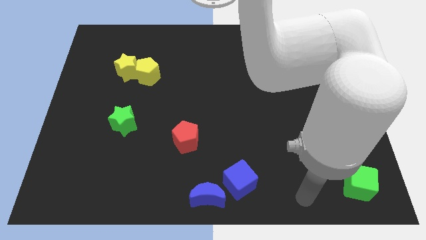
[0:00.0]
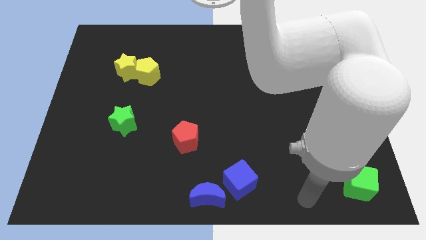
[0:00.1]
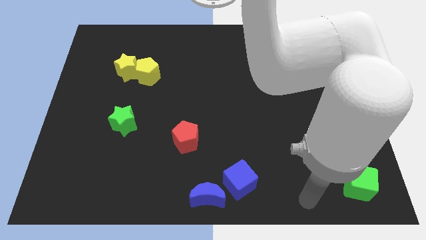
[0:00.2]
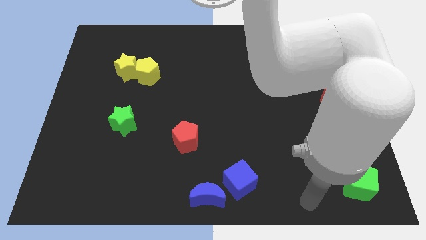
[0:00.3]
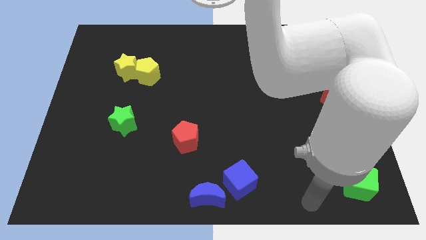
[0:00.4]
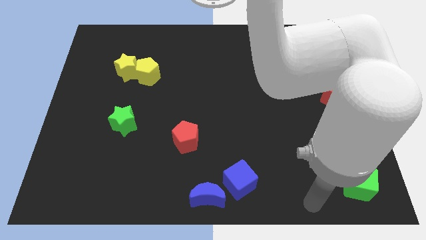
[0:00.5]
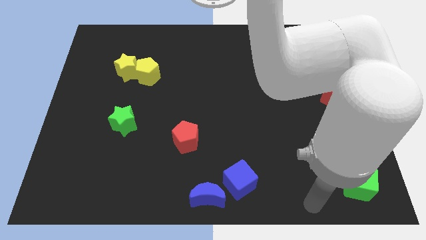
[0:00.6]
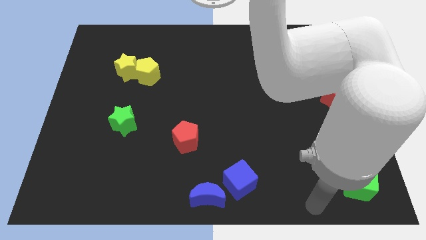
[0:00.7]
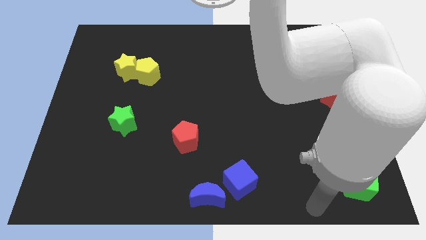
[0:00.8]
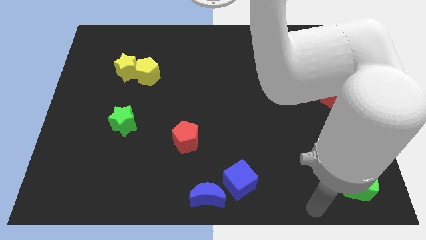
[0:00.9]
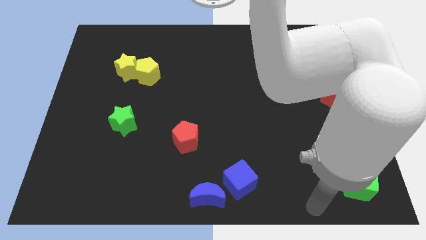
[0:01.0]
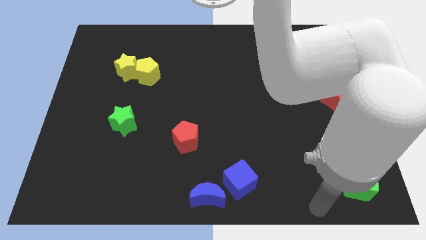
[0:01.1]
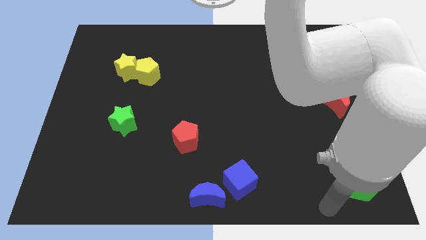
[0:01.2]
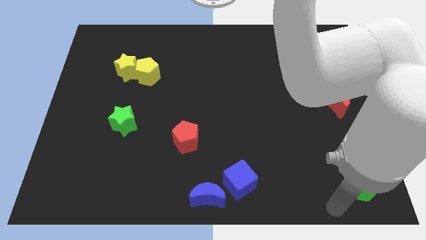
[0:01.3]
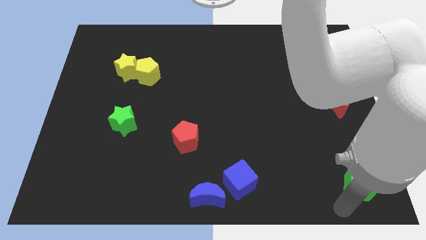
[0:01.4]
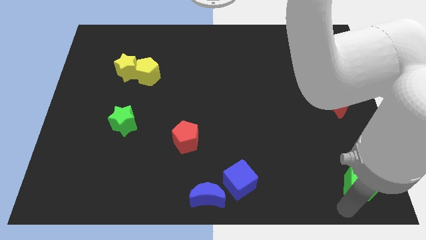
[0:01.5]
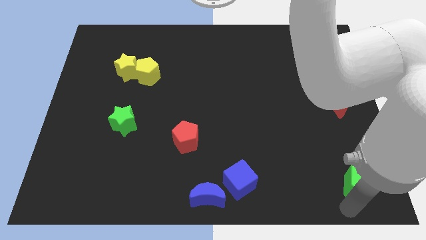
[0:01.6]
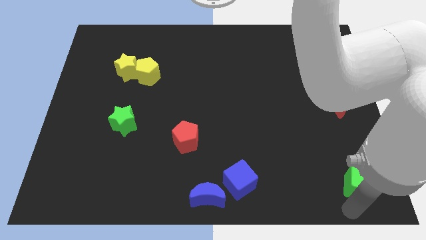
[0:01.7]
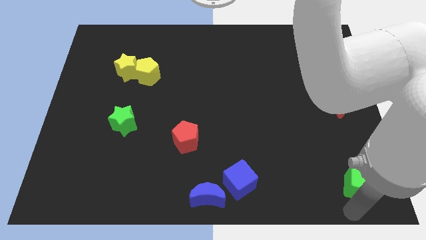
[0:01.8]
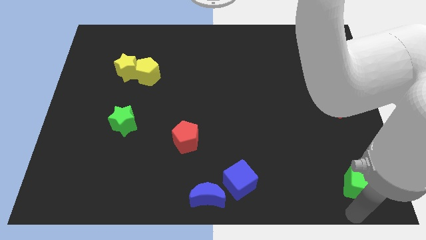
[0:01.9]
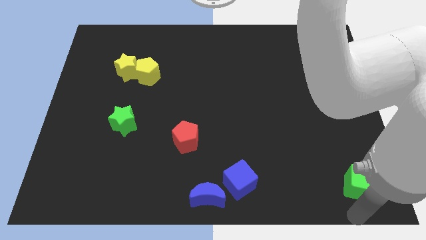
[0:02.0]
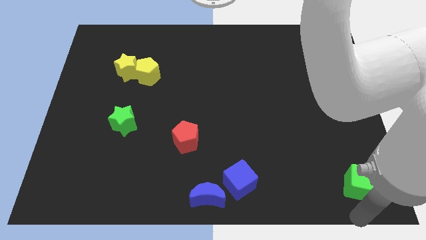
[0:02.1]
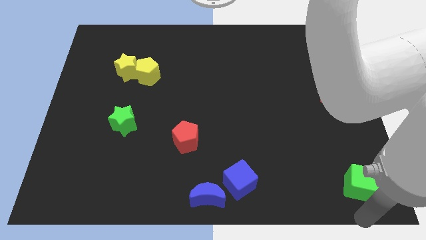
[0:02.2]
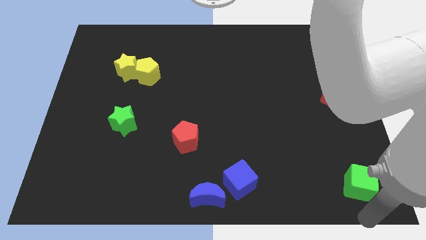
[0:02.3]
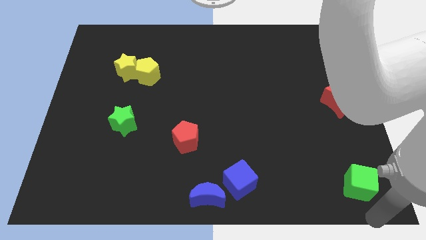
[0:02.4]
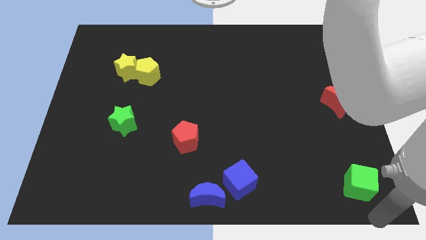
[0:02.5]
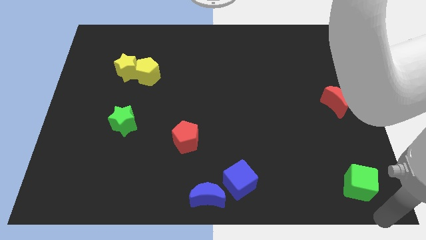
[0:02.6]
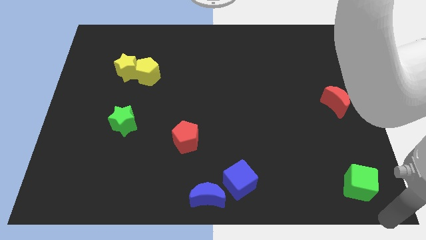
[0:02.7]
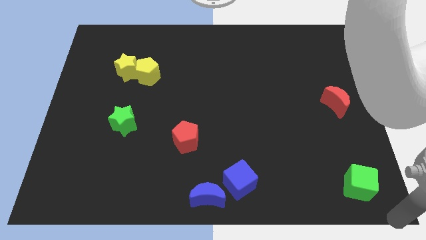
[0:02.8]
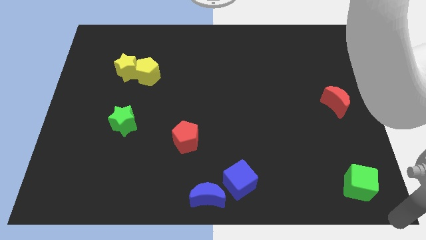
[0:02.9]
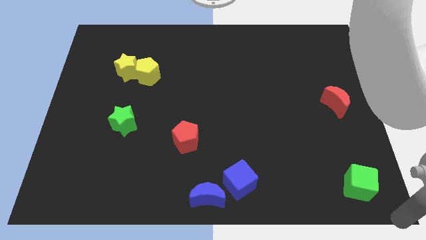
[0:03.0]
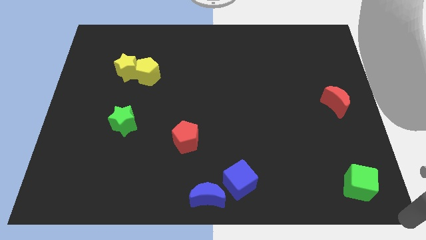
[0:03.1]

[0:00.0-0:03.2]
place your arm at the right bottom corner

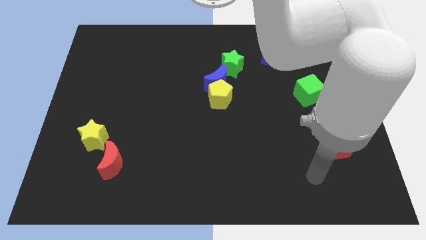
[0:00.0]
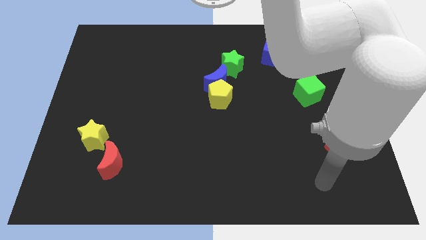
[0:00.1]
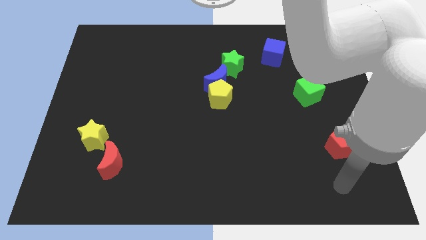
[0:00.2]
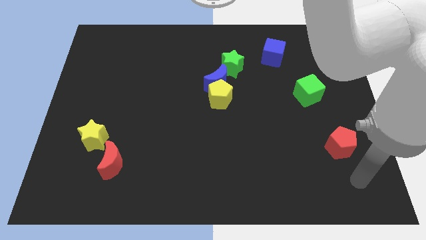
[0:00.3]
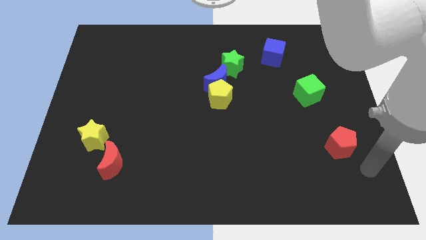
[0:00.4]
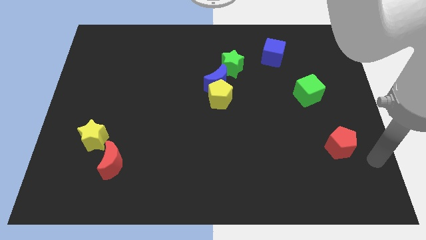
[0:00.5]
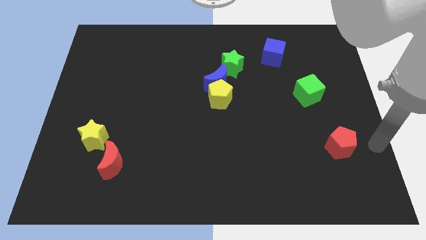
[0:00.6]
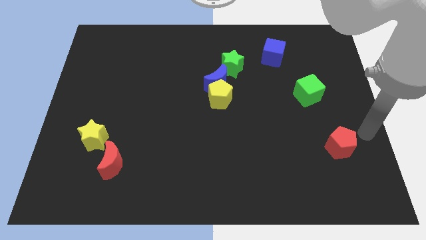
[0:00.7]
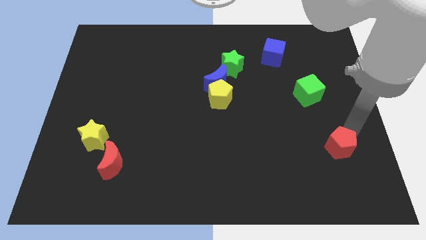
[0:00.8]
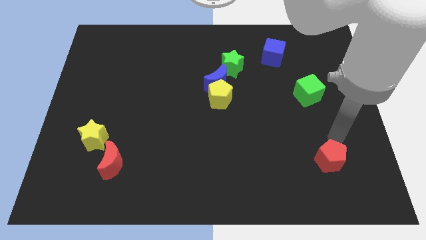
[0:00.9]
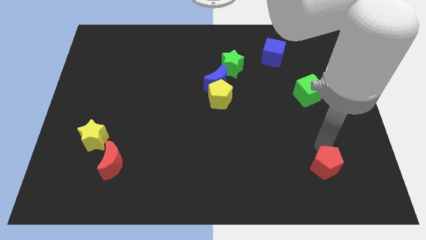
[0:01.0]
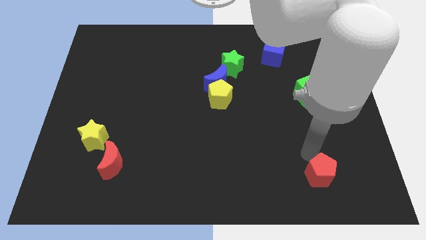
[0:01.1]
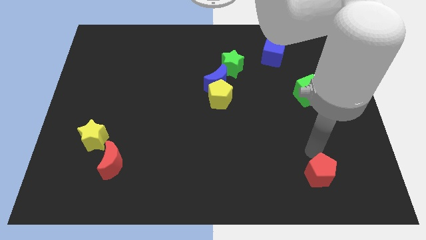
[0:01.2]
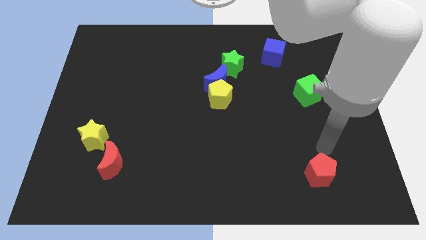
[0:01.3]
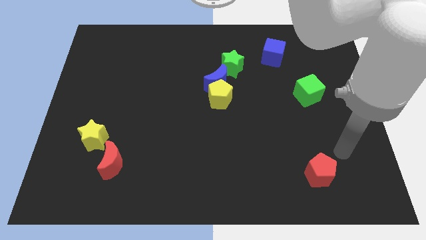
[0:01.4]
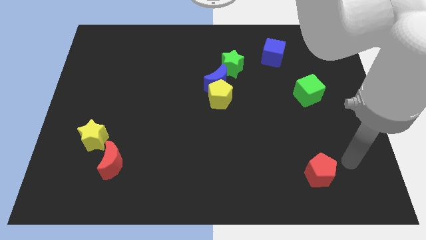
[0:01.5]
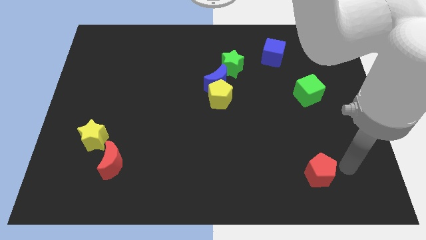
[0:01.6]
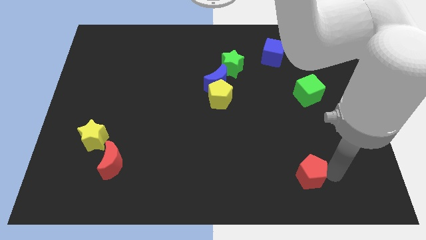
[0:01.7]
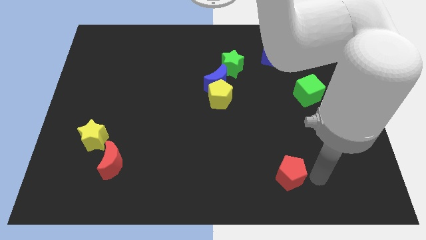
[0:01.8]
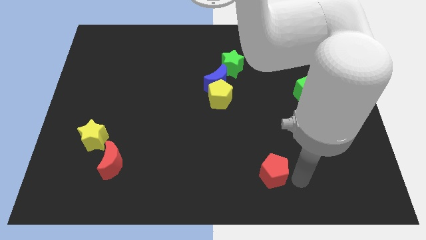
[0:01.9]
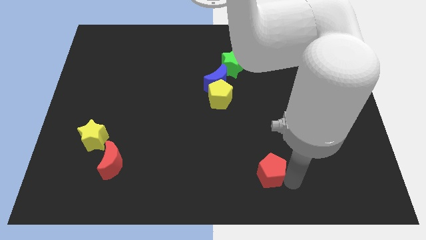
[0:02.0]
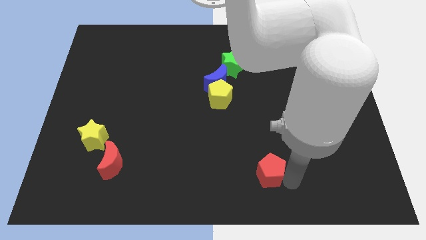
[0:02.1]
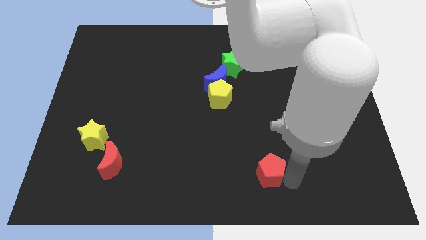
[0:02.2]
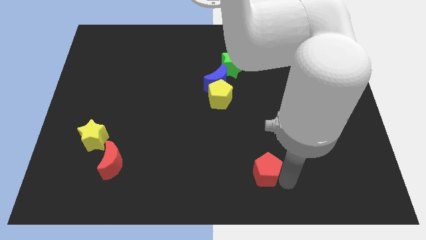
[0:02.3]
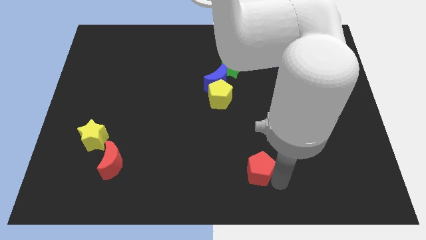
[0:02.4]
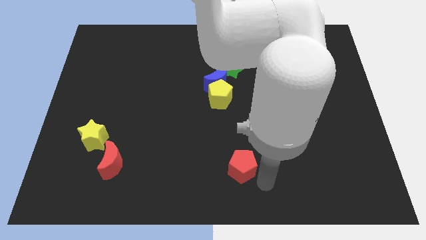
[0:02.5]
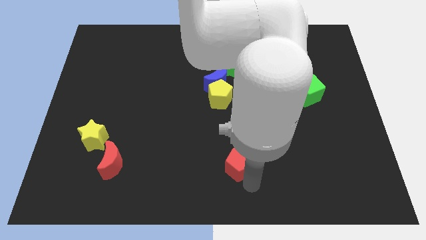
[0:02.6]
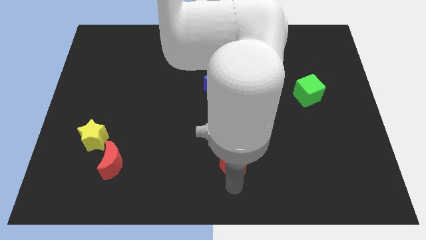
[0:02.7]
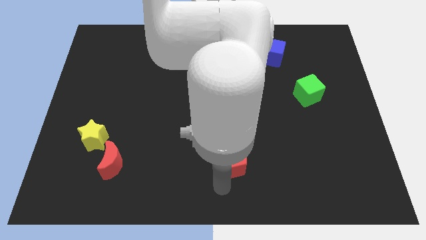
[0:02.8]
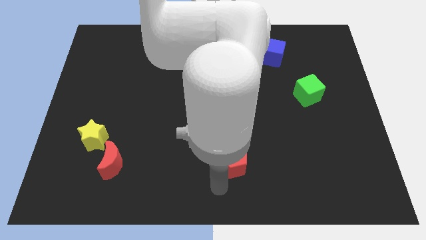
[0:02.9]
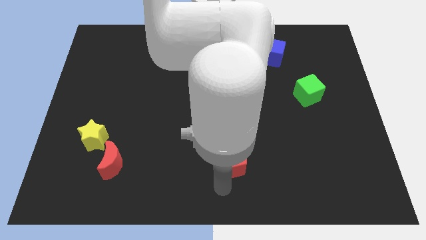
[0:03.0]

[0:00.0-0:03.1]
move the red pentagon vertically below to the yellow pentagon

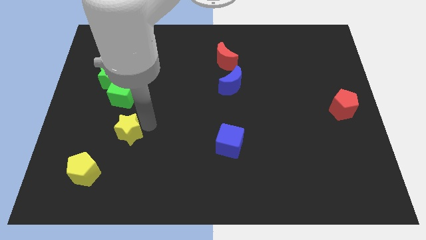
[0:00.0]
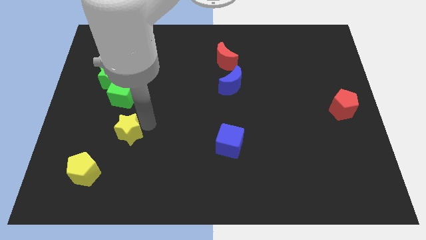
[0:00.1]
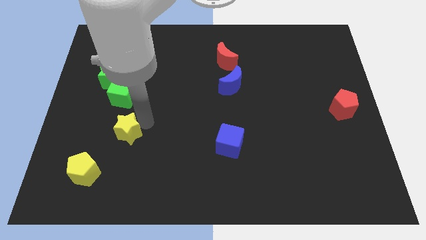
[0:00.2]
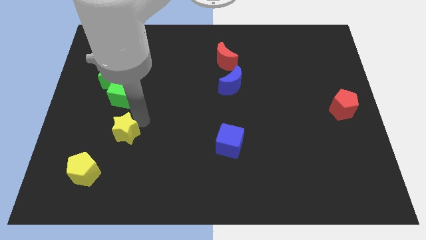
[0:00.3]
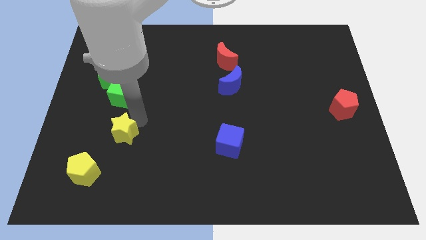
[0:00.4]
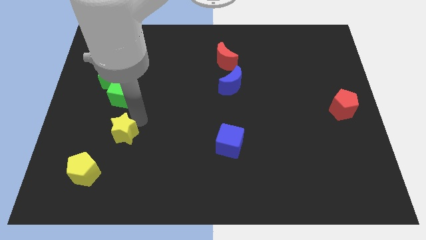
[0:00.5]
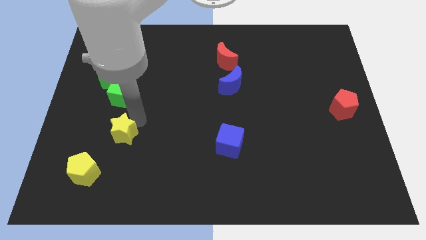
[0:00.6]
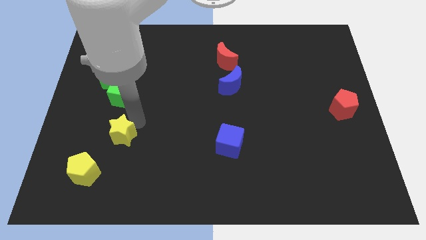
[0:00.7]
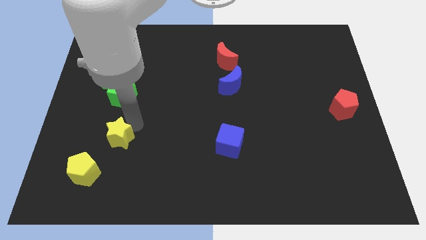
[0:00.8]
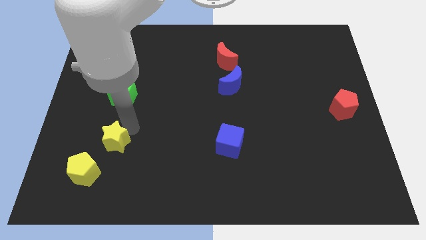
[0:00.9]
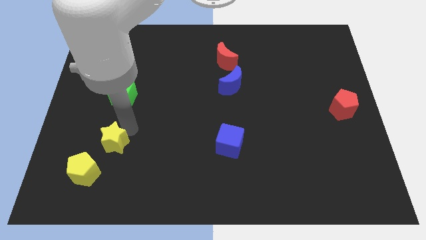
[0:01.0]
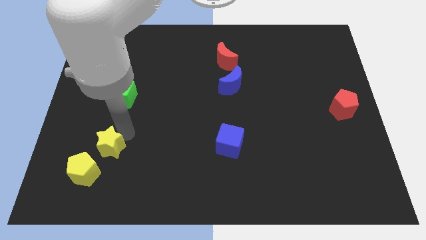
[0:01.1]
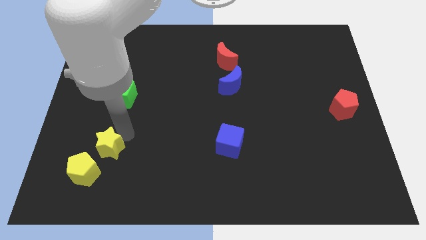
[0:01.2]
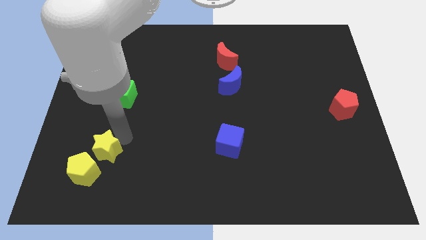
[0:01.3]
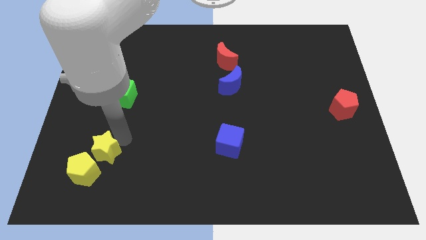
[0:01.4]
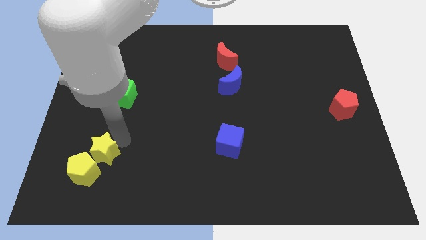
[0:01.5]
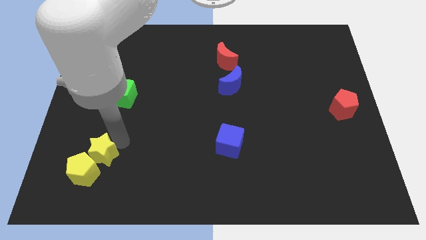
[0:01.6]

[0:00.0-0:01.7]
place the yellow star above the yellow pentagon

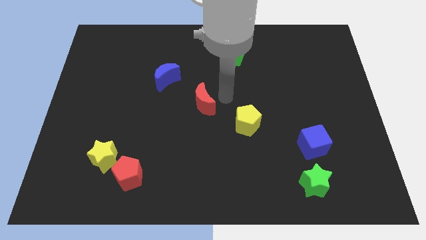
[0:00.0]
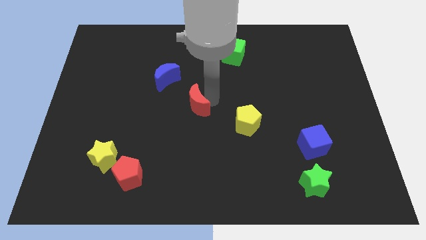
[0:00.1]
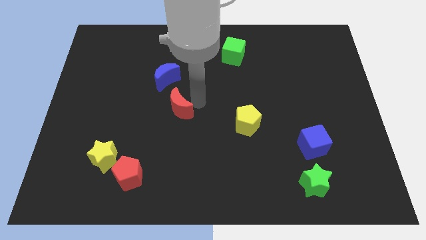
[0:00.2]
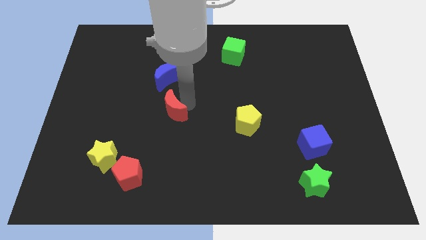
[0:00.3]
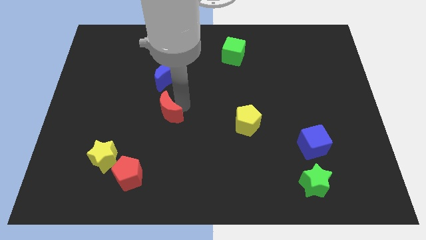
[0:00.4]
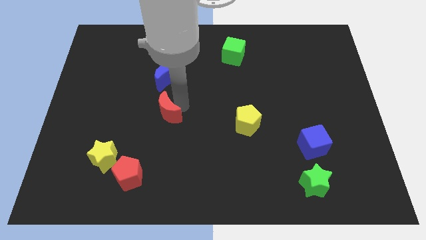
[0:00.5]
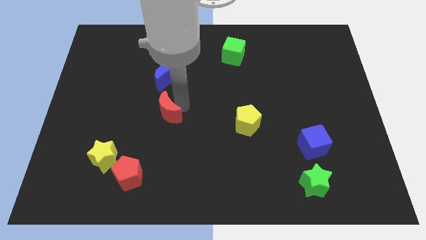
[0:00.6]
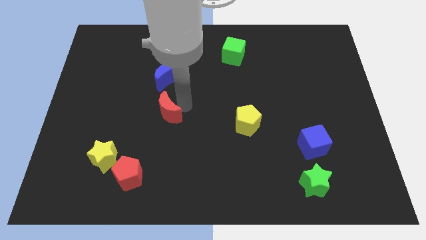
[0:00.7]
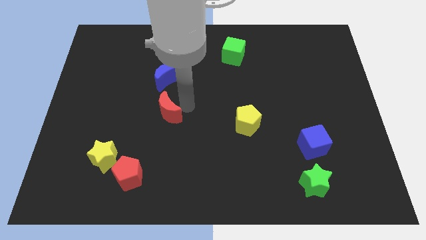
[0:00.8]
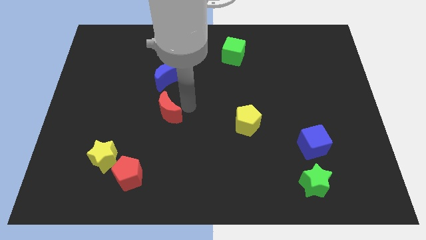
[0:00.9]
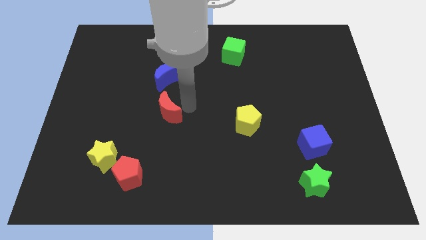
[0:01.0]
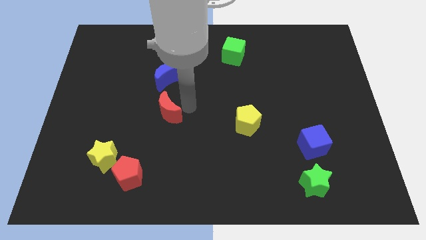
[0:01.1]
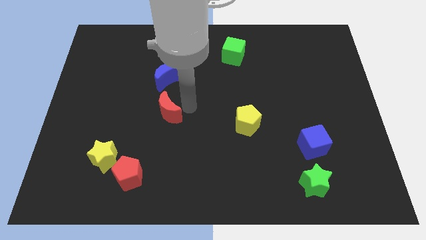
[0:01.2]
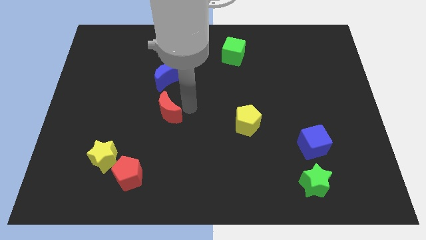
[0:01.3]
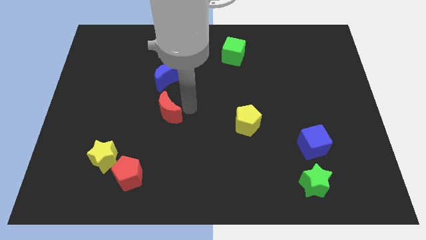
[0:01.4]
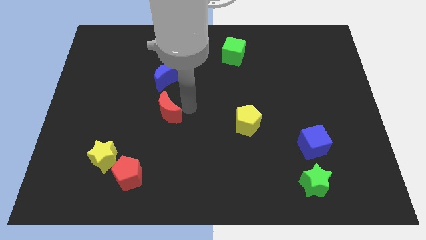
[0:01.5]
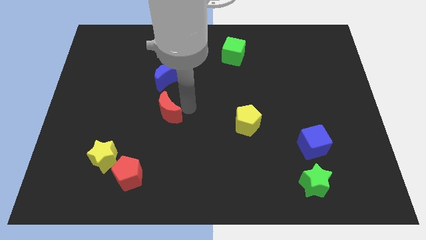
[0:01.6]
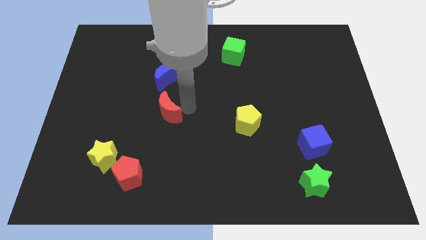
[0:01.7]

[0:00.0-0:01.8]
move the red moon below the blue crescent
